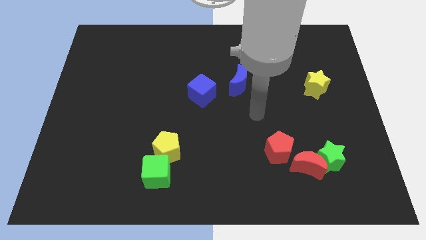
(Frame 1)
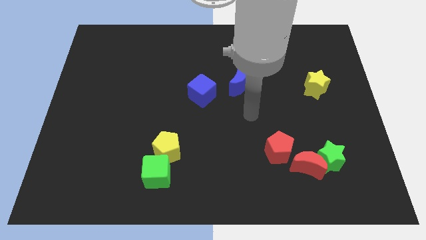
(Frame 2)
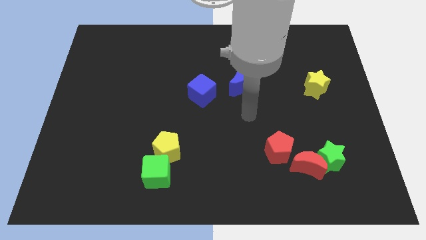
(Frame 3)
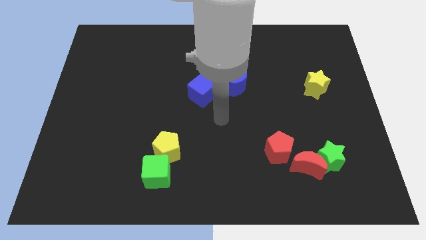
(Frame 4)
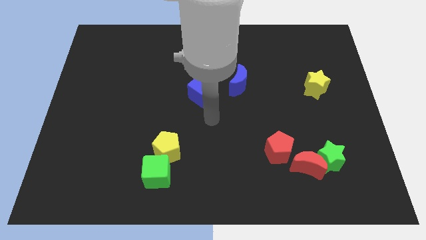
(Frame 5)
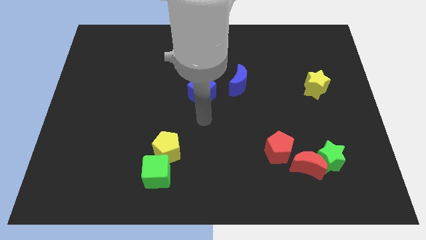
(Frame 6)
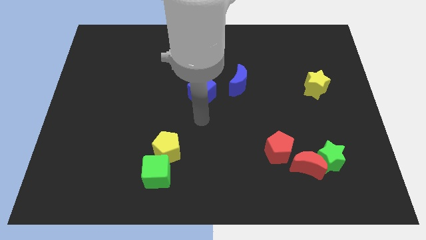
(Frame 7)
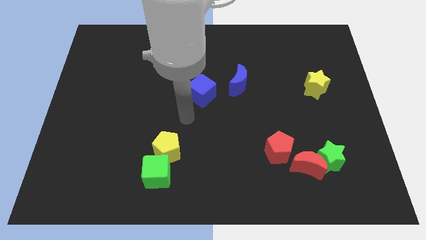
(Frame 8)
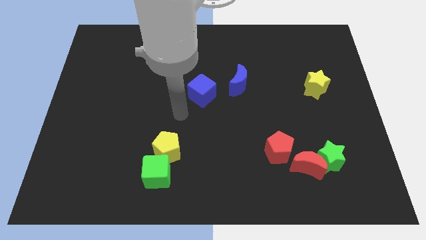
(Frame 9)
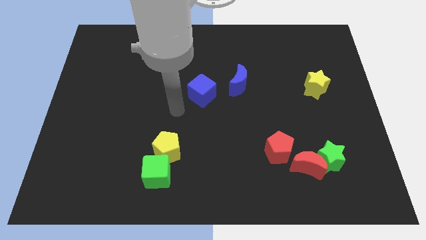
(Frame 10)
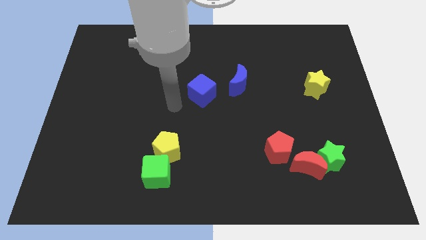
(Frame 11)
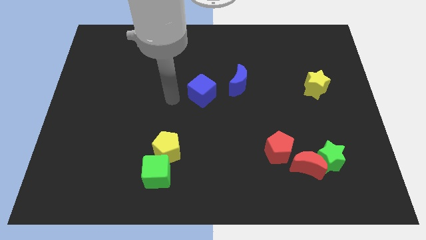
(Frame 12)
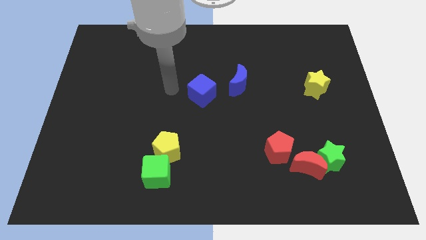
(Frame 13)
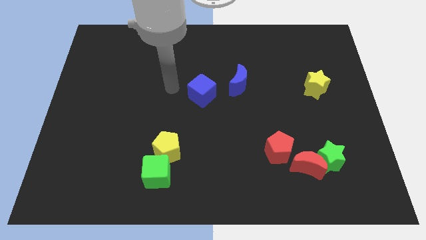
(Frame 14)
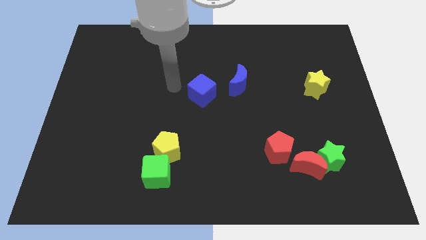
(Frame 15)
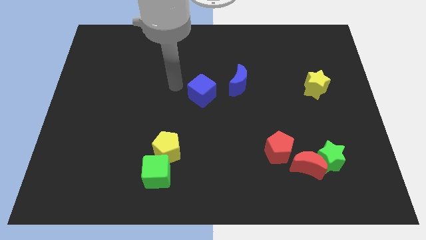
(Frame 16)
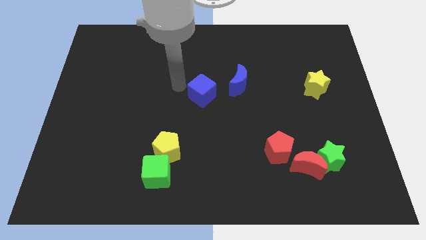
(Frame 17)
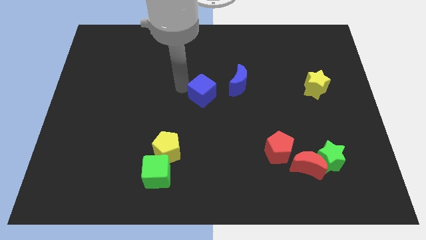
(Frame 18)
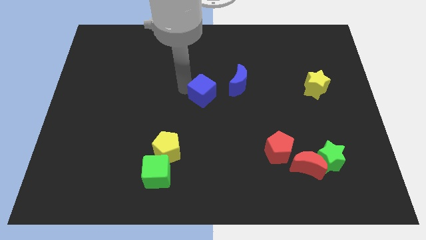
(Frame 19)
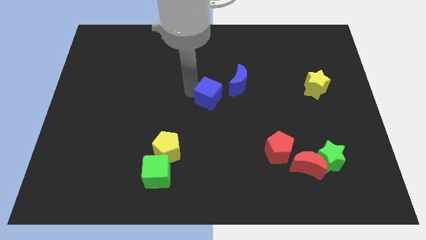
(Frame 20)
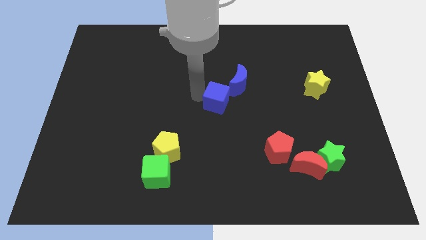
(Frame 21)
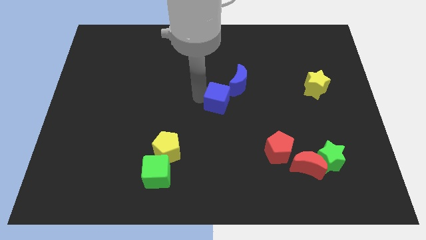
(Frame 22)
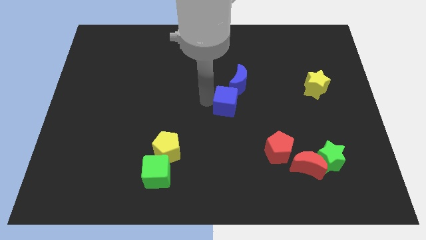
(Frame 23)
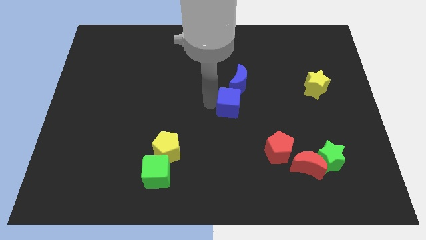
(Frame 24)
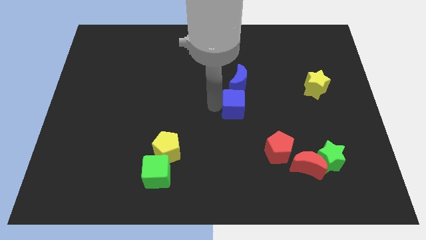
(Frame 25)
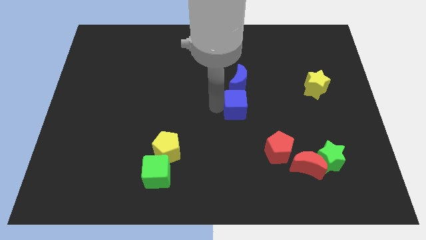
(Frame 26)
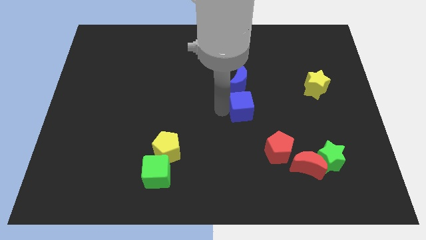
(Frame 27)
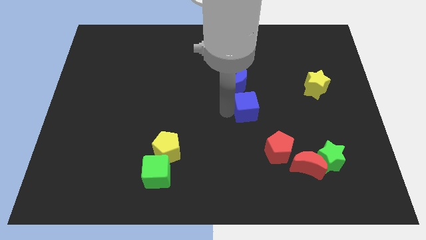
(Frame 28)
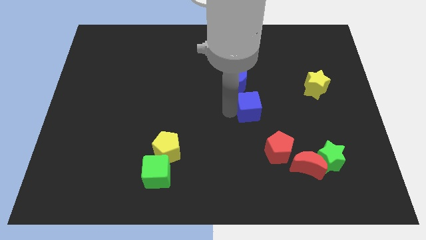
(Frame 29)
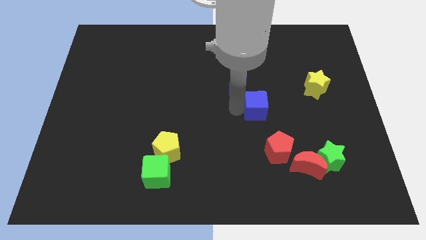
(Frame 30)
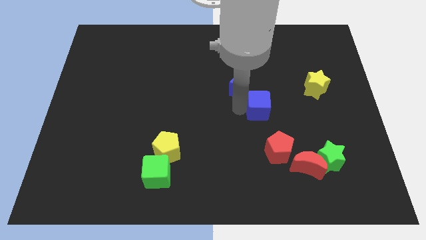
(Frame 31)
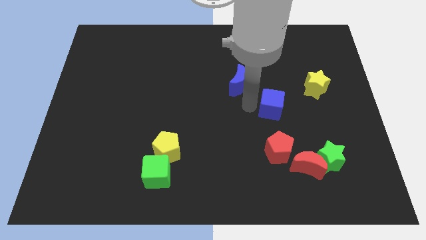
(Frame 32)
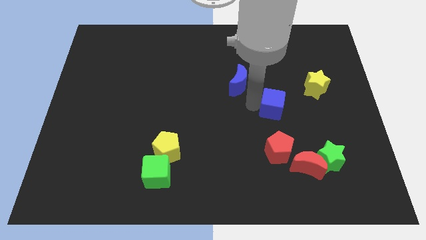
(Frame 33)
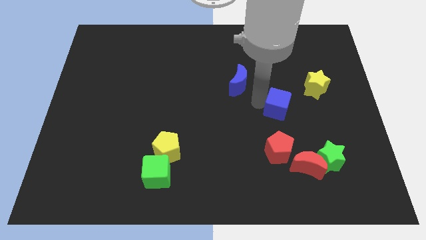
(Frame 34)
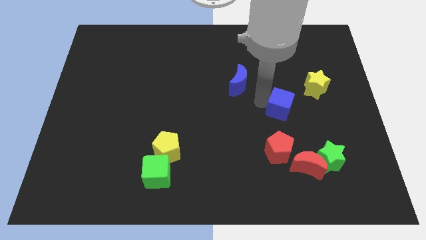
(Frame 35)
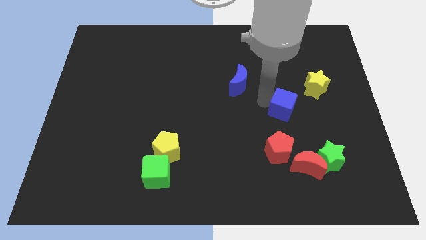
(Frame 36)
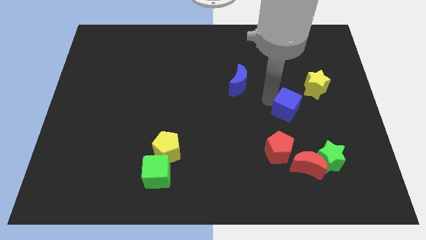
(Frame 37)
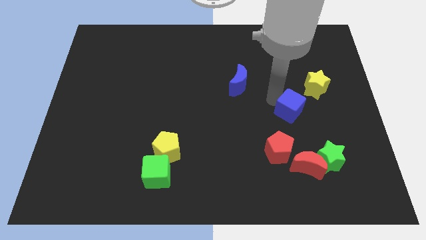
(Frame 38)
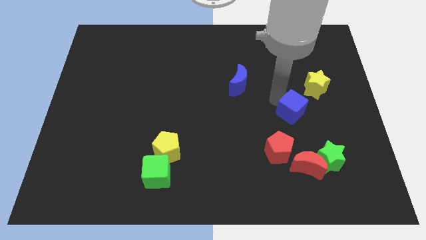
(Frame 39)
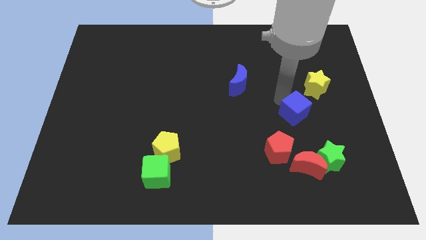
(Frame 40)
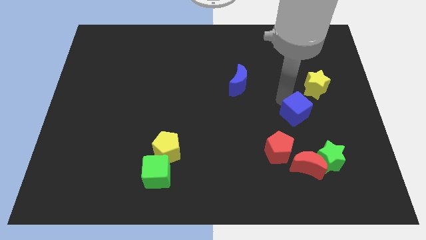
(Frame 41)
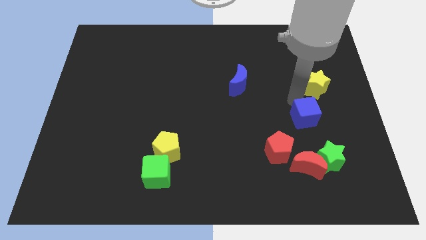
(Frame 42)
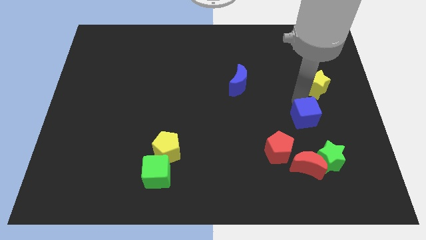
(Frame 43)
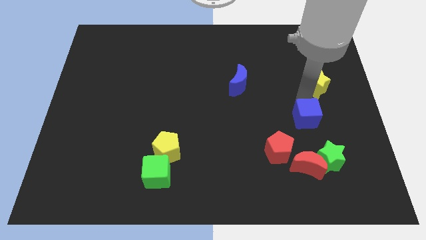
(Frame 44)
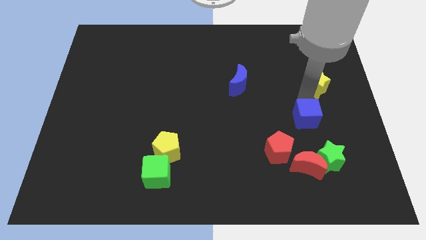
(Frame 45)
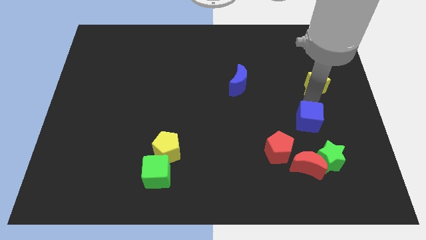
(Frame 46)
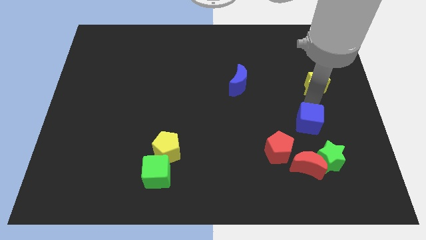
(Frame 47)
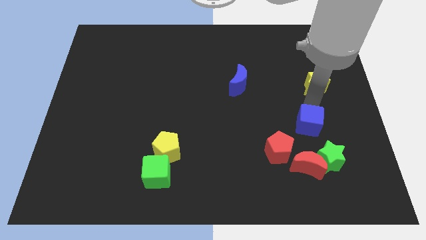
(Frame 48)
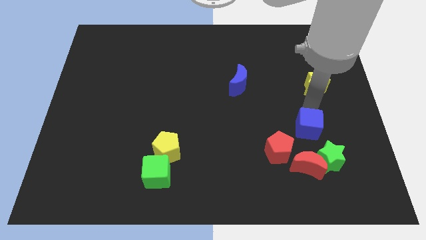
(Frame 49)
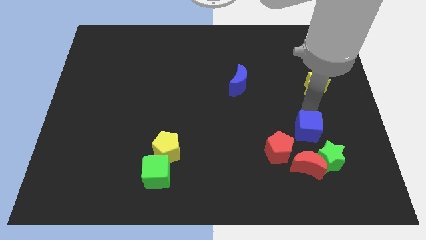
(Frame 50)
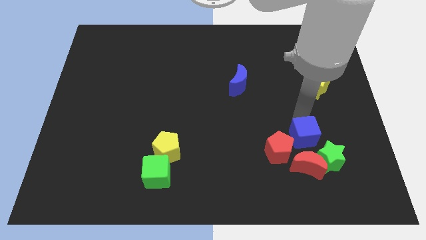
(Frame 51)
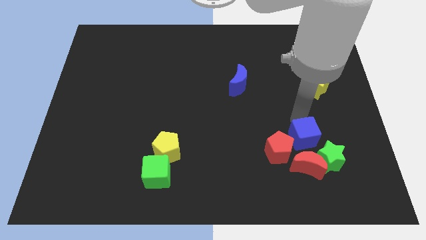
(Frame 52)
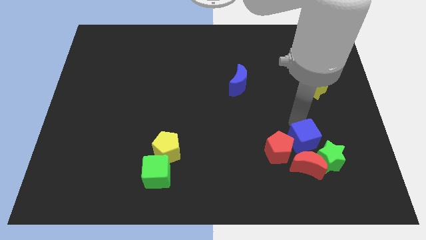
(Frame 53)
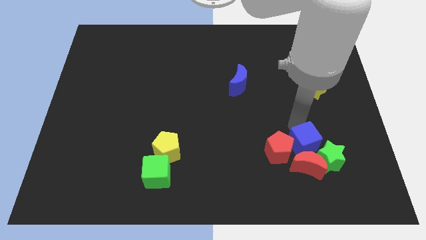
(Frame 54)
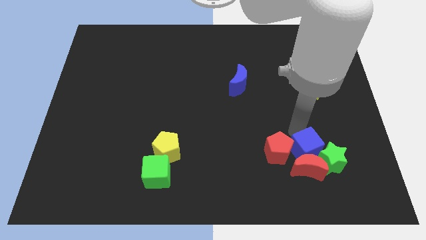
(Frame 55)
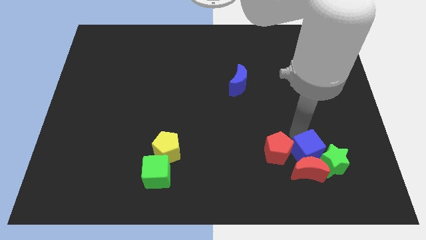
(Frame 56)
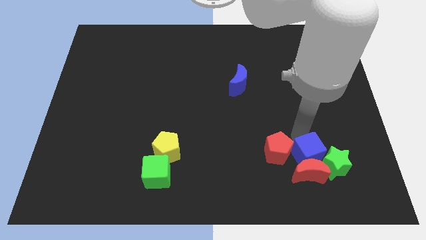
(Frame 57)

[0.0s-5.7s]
move the blue cube to the green star

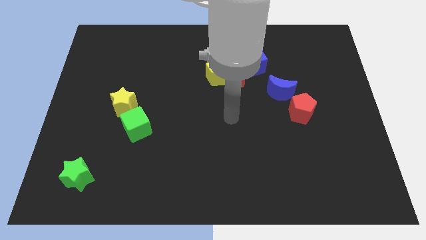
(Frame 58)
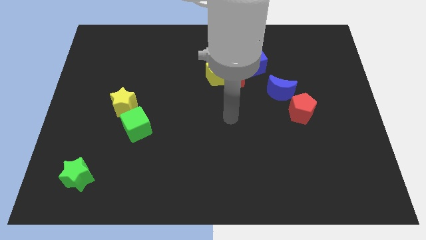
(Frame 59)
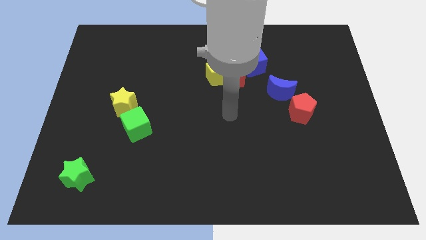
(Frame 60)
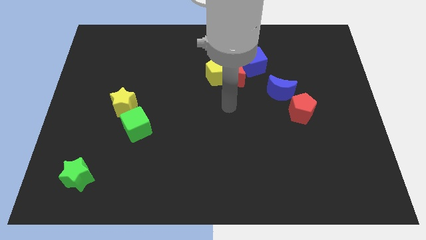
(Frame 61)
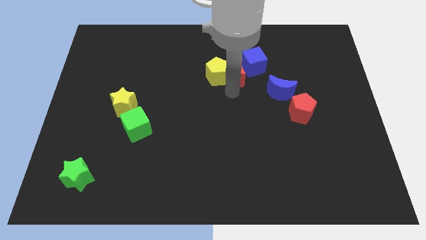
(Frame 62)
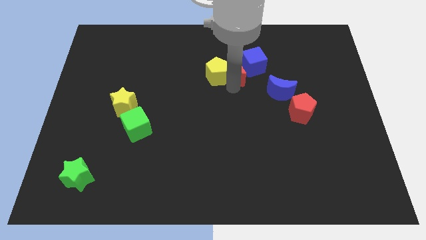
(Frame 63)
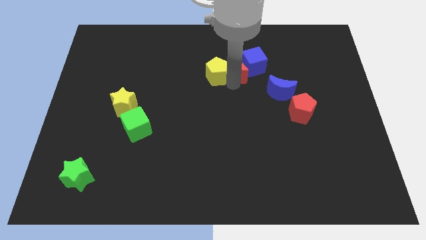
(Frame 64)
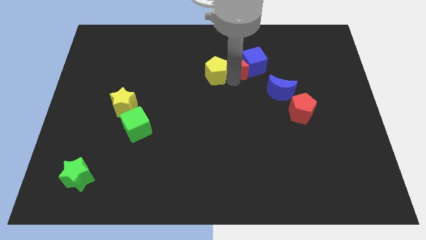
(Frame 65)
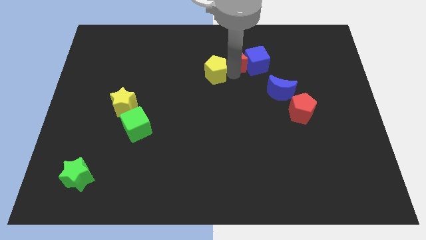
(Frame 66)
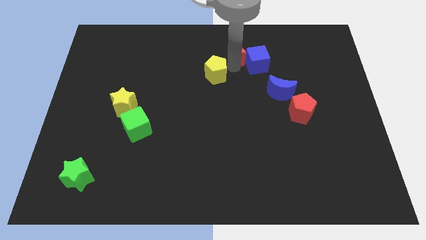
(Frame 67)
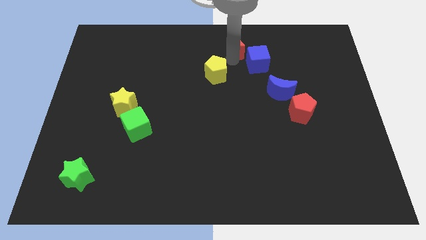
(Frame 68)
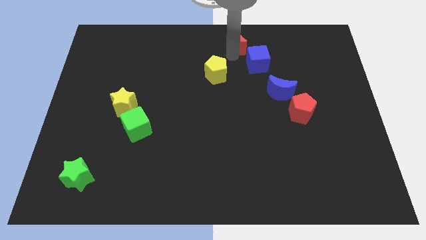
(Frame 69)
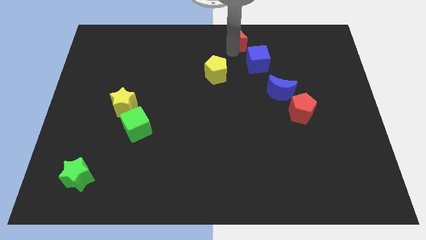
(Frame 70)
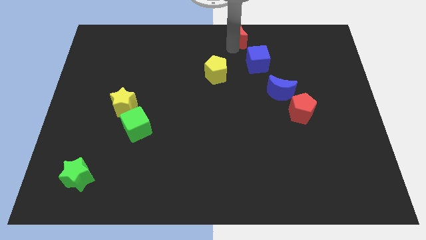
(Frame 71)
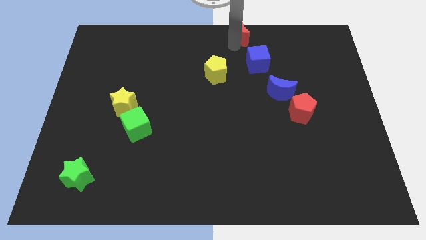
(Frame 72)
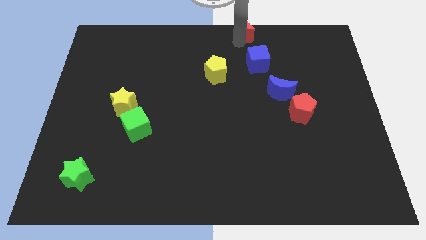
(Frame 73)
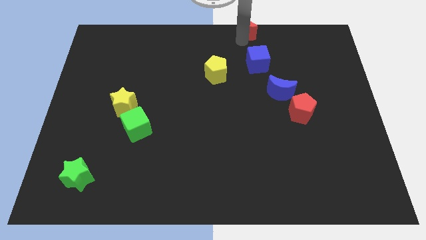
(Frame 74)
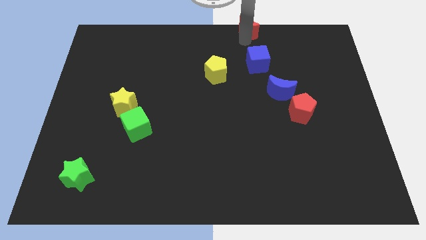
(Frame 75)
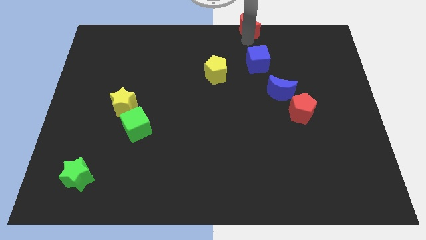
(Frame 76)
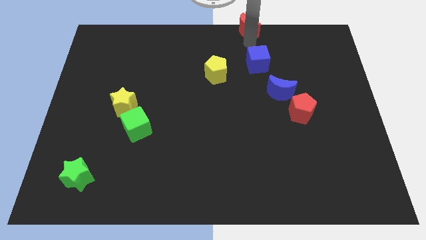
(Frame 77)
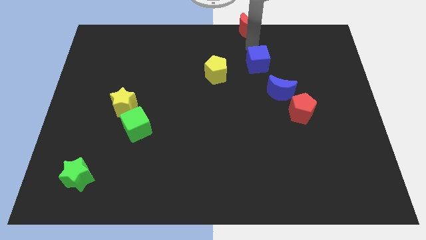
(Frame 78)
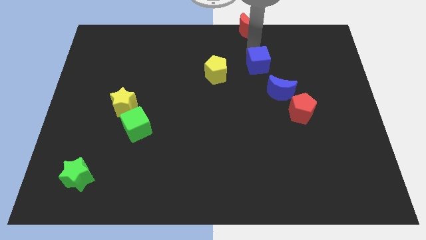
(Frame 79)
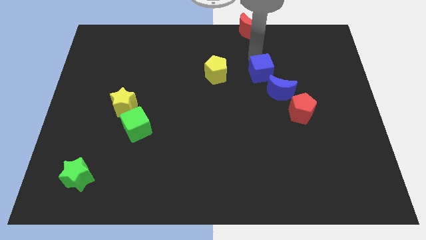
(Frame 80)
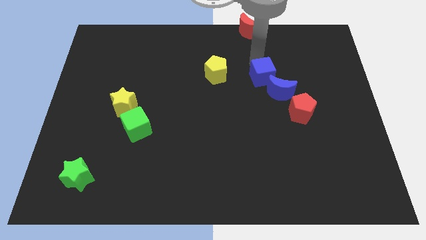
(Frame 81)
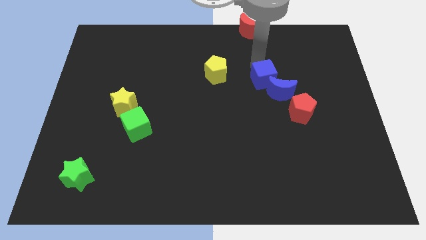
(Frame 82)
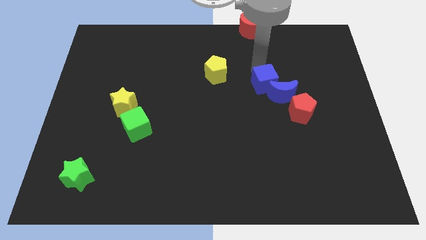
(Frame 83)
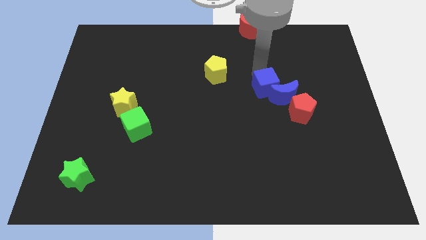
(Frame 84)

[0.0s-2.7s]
move the blue cube next to the blue moon
